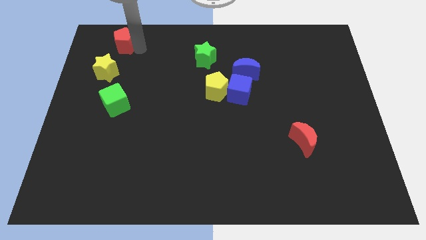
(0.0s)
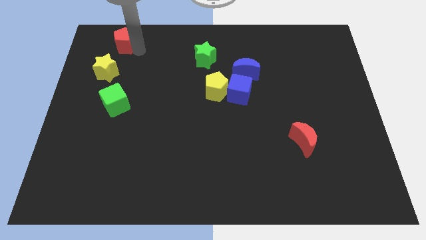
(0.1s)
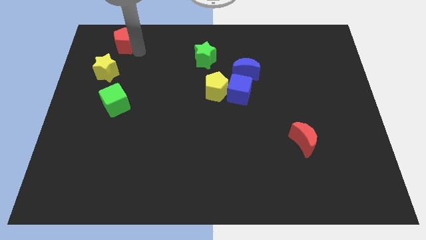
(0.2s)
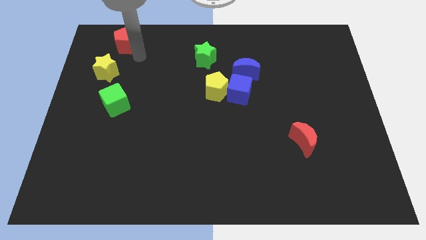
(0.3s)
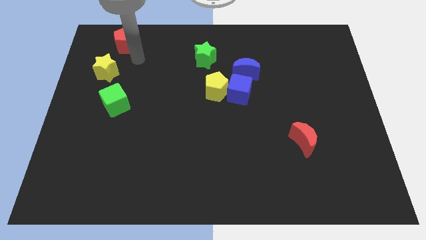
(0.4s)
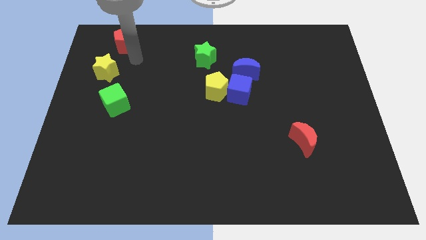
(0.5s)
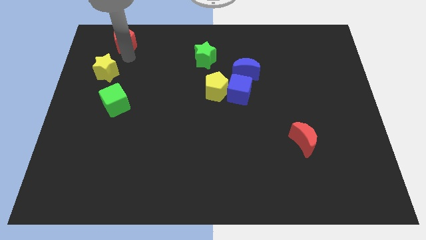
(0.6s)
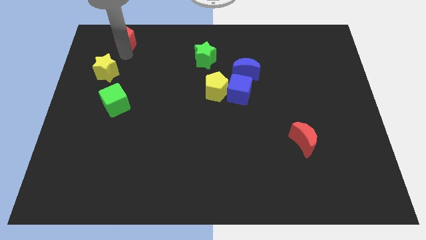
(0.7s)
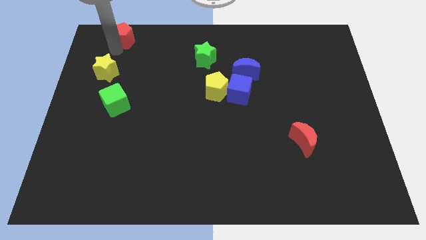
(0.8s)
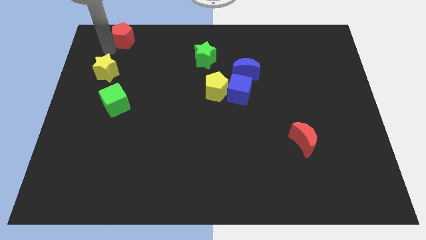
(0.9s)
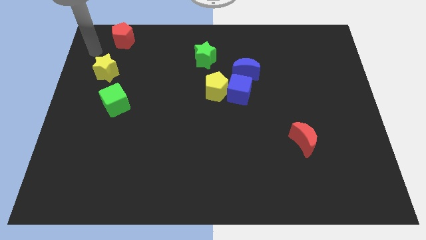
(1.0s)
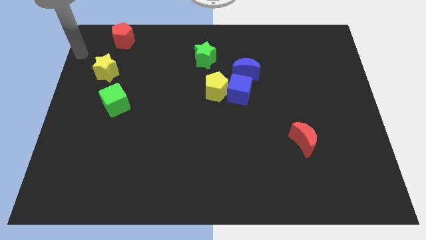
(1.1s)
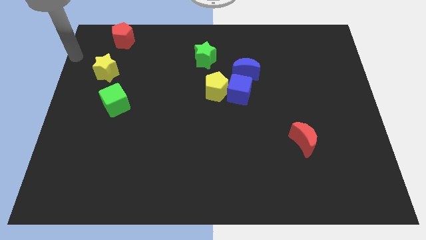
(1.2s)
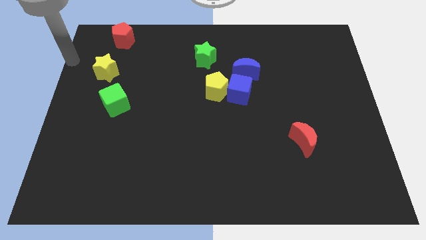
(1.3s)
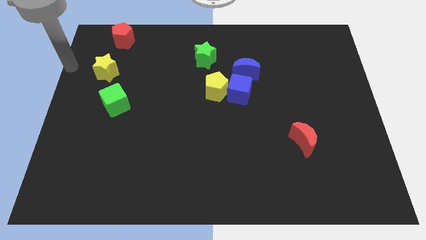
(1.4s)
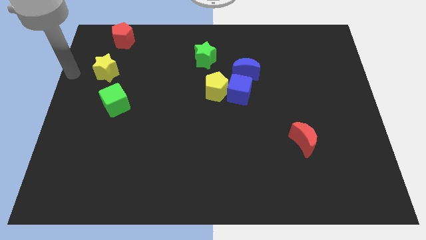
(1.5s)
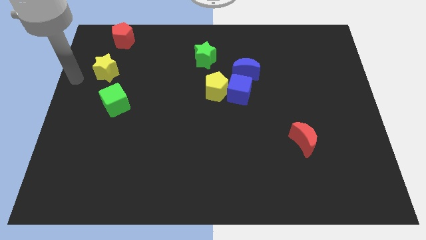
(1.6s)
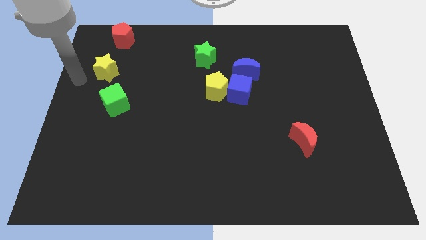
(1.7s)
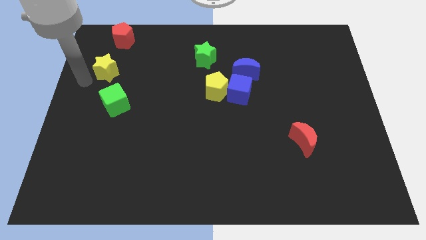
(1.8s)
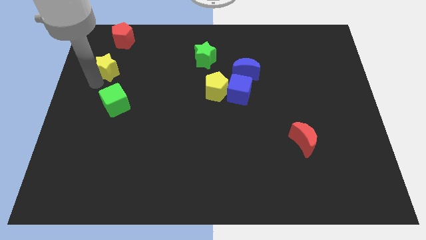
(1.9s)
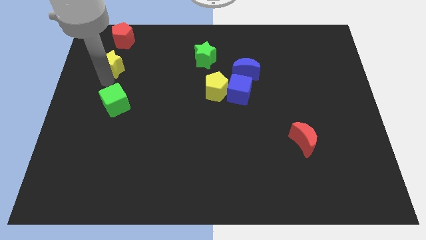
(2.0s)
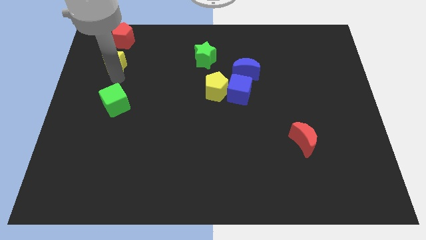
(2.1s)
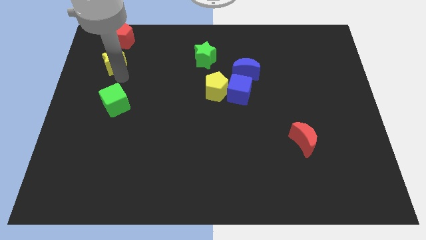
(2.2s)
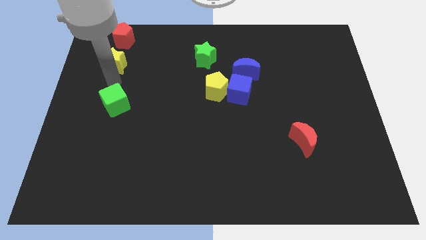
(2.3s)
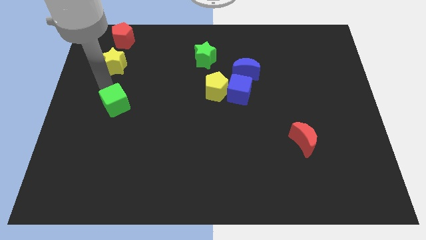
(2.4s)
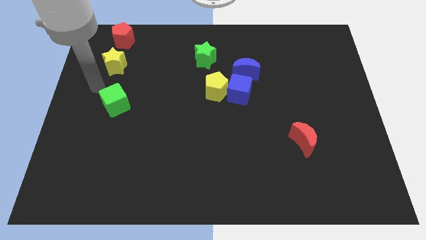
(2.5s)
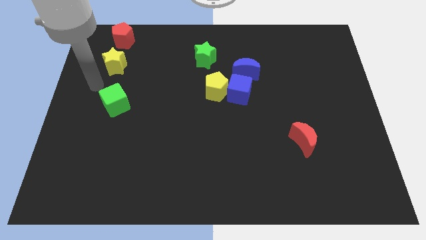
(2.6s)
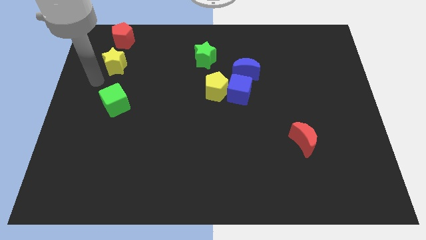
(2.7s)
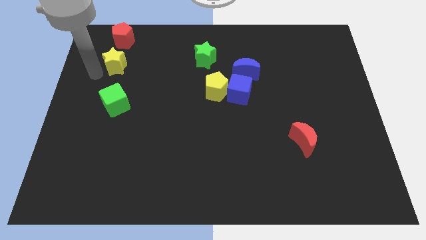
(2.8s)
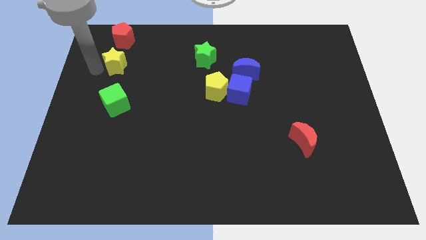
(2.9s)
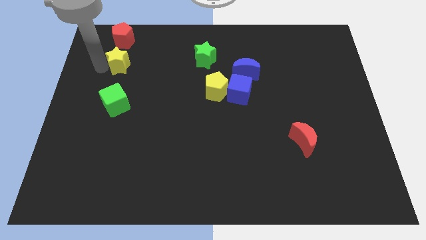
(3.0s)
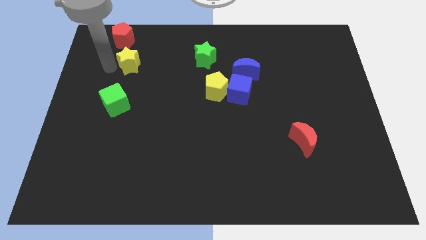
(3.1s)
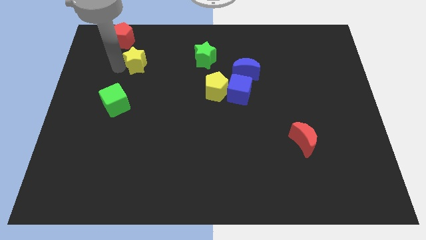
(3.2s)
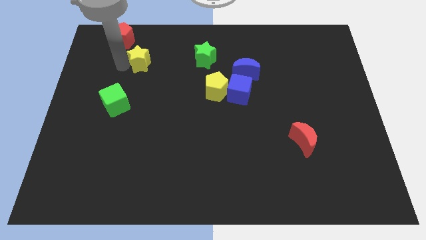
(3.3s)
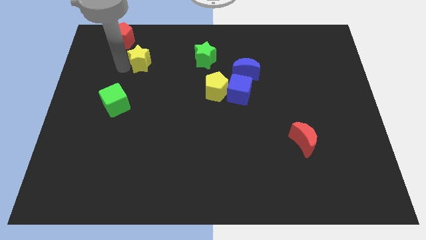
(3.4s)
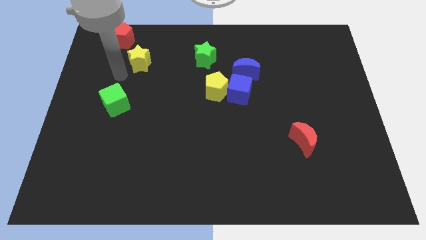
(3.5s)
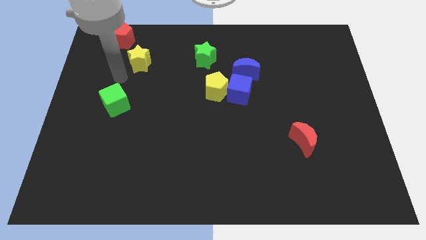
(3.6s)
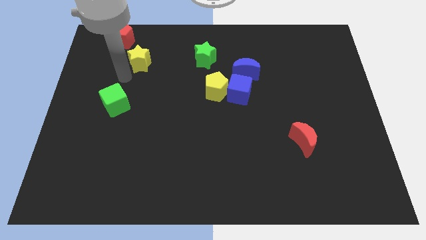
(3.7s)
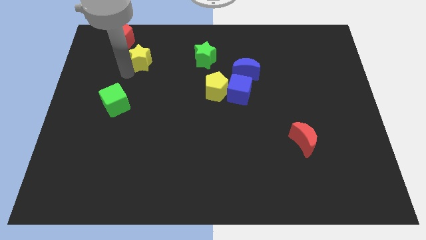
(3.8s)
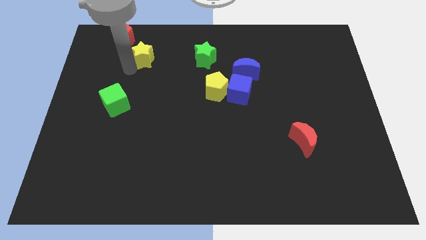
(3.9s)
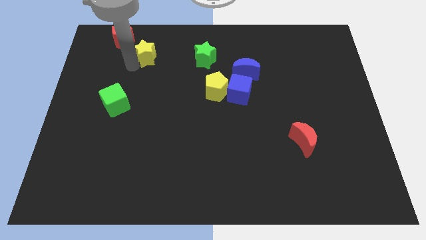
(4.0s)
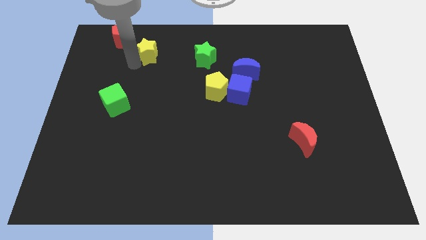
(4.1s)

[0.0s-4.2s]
place the yellow star below the red pentagon

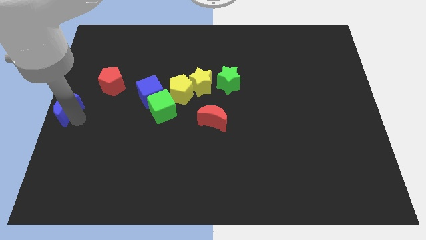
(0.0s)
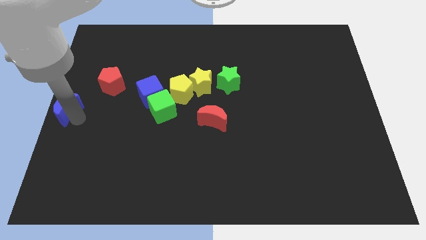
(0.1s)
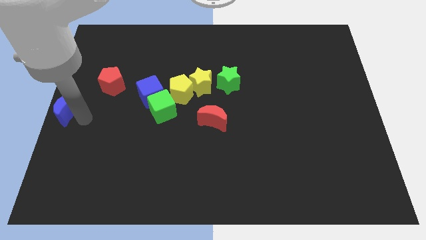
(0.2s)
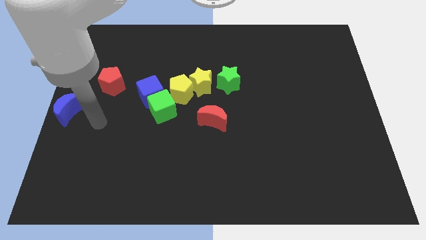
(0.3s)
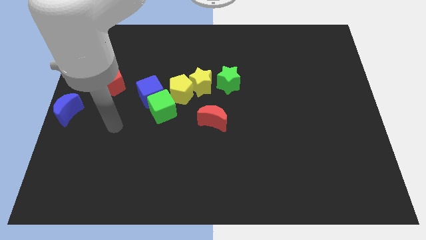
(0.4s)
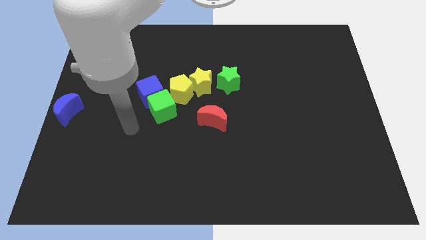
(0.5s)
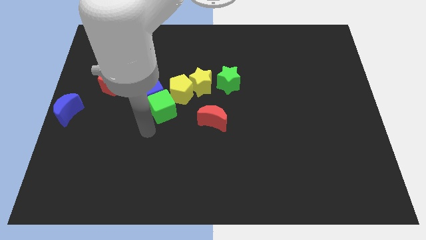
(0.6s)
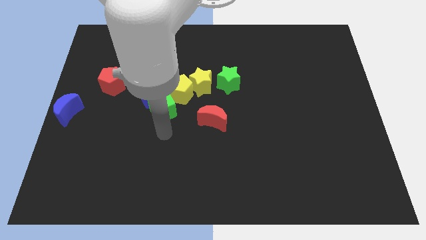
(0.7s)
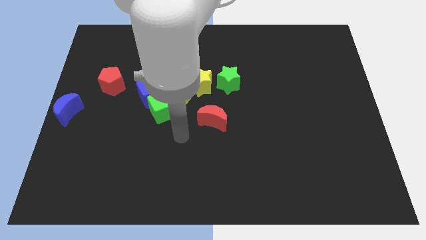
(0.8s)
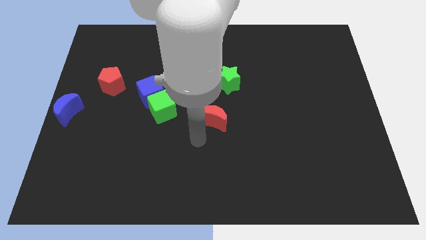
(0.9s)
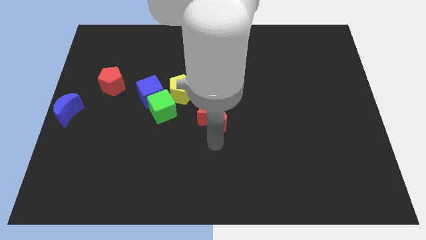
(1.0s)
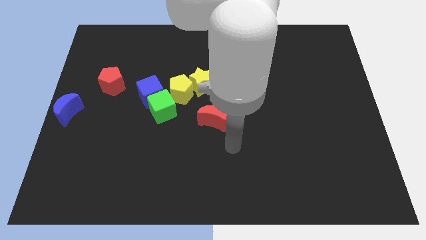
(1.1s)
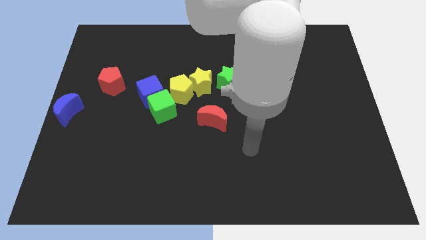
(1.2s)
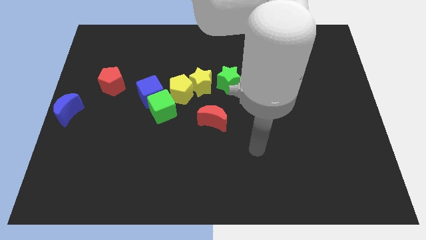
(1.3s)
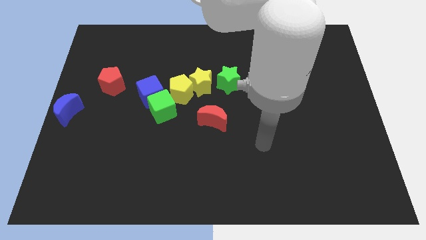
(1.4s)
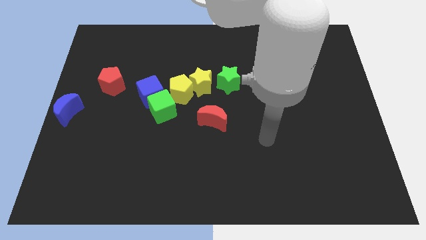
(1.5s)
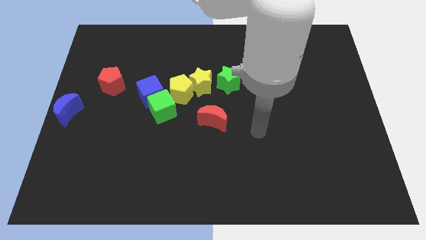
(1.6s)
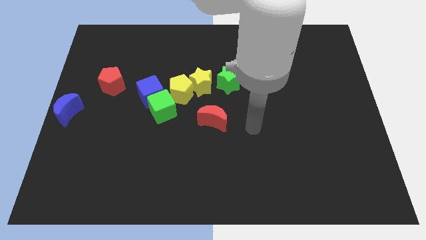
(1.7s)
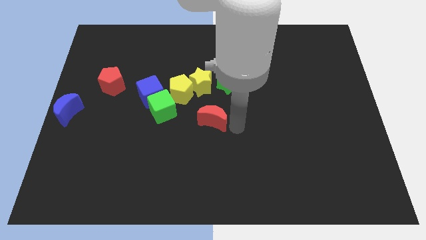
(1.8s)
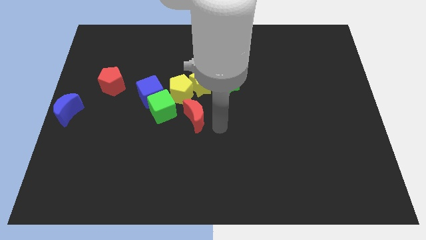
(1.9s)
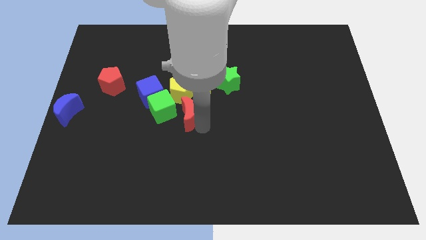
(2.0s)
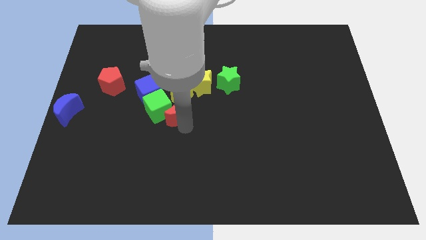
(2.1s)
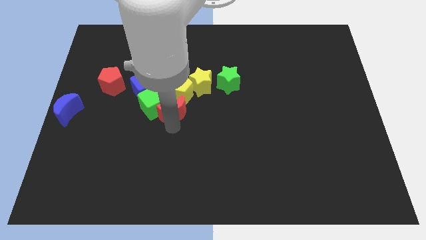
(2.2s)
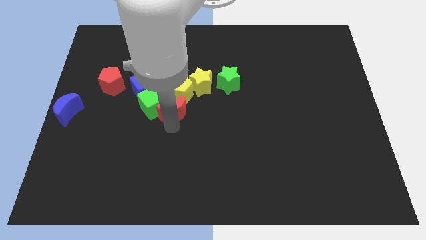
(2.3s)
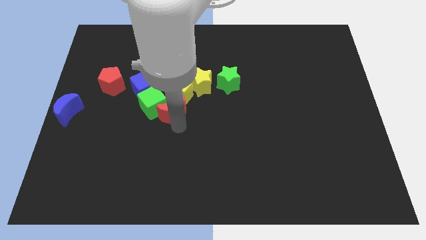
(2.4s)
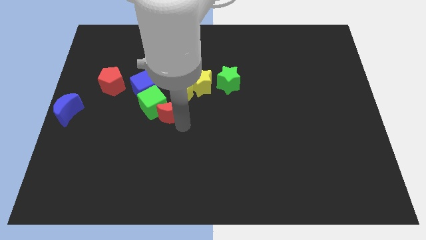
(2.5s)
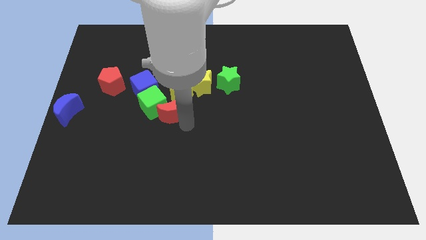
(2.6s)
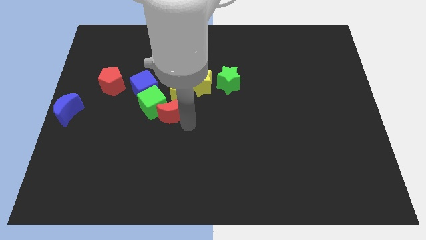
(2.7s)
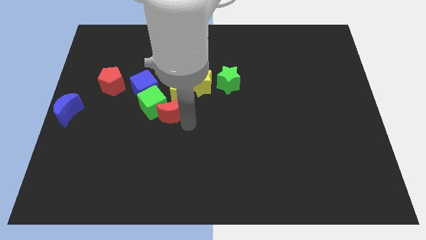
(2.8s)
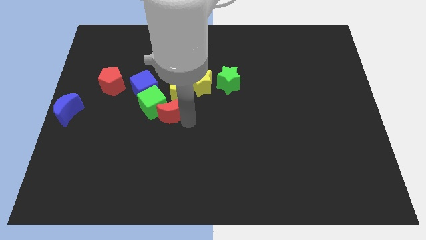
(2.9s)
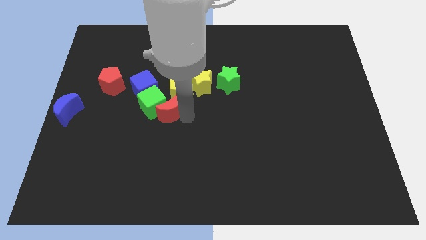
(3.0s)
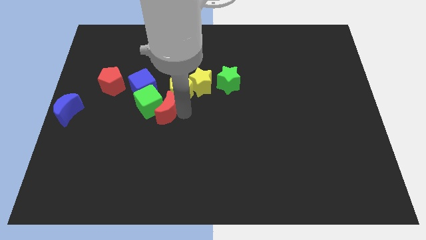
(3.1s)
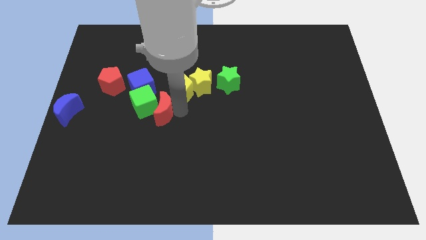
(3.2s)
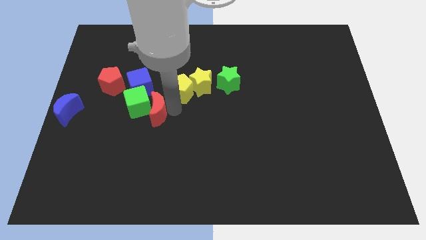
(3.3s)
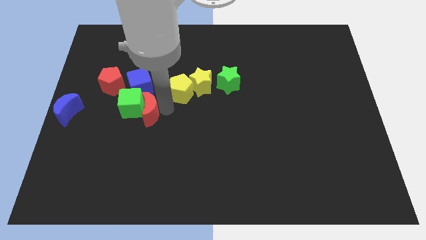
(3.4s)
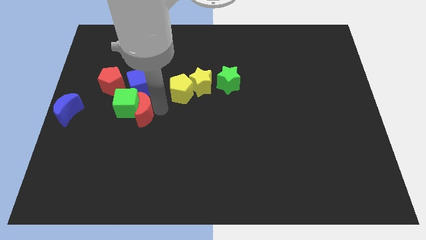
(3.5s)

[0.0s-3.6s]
slide the red moon into the right side of the green cube

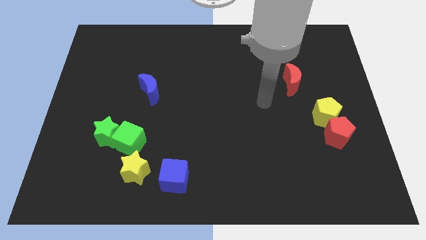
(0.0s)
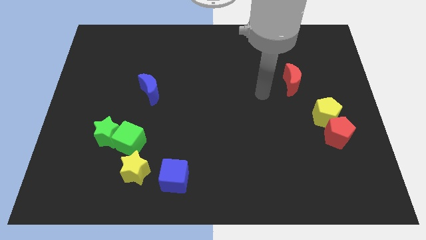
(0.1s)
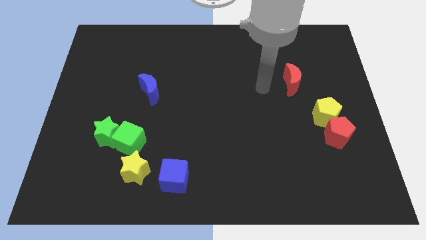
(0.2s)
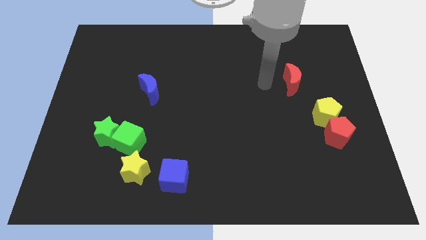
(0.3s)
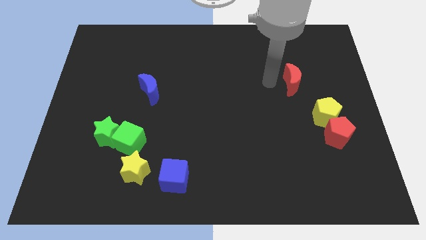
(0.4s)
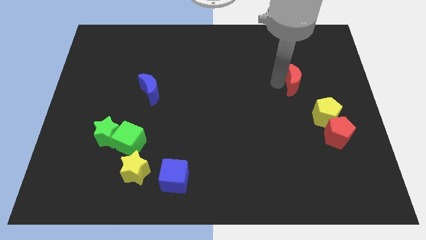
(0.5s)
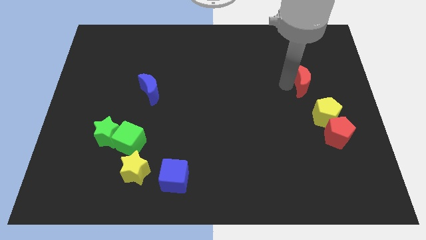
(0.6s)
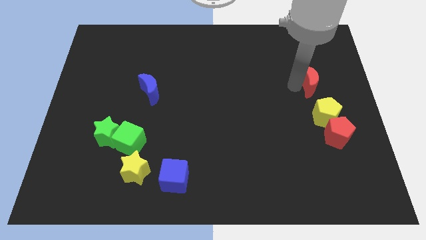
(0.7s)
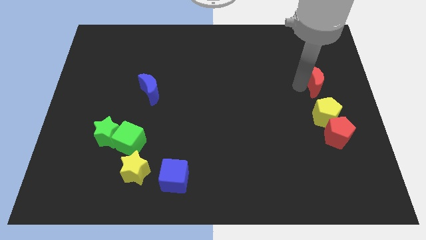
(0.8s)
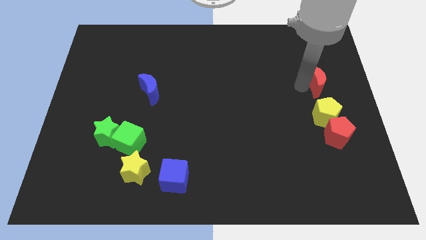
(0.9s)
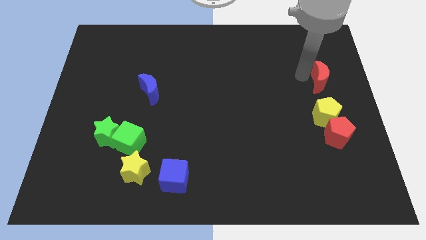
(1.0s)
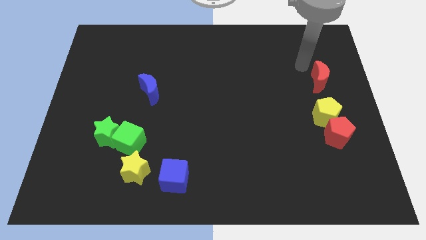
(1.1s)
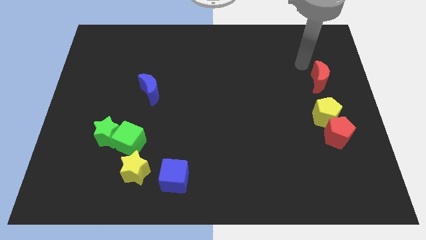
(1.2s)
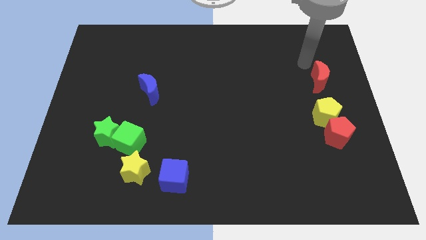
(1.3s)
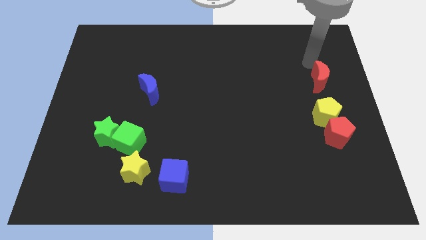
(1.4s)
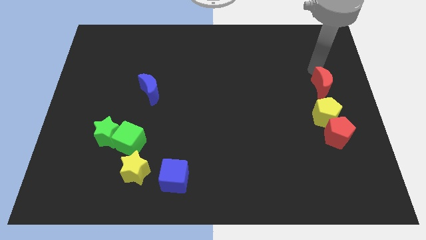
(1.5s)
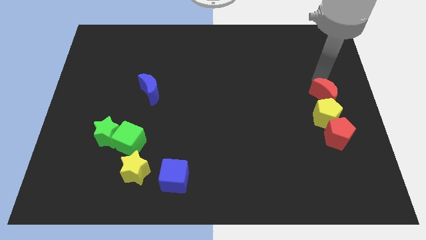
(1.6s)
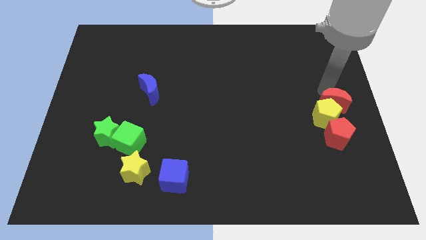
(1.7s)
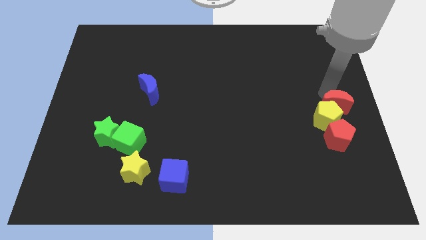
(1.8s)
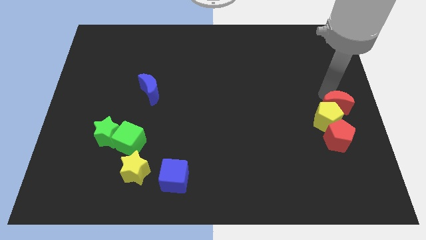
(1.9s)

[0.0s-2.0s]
move the red crescent above the yellow pentagon
